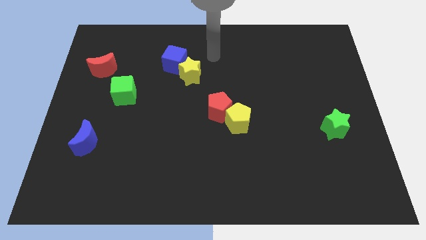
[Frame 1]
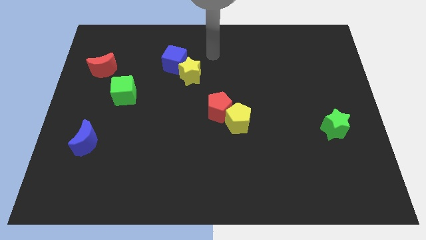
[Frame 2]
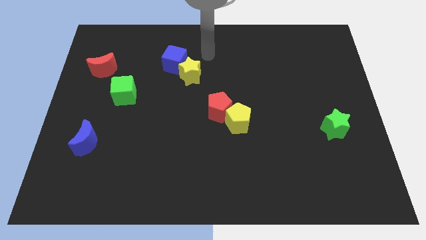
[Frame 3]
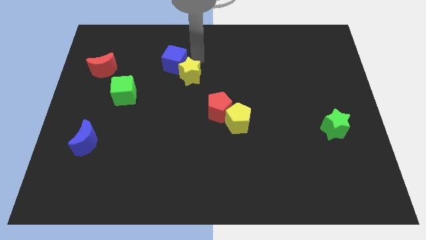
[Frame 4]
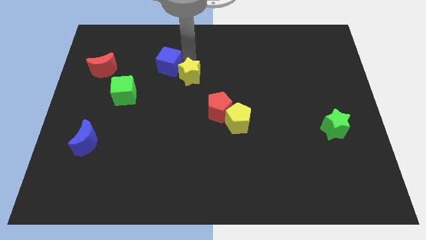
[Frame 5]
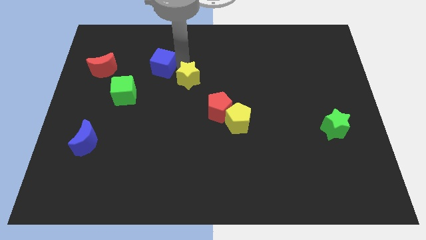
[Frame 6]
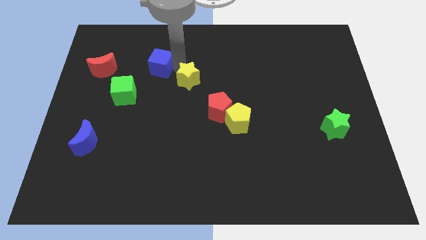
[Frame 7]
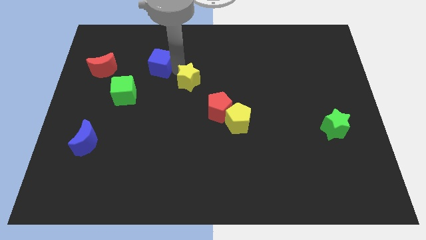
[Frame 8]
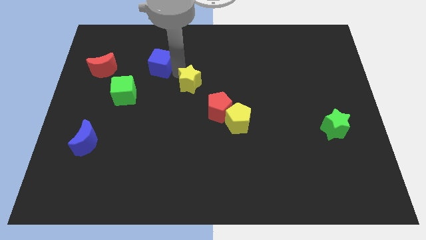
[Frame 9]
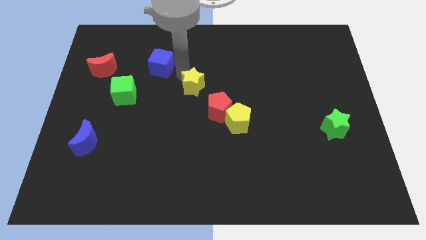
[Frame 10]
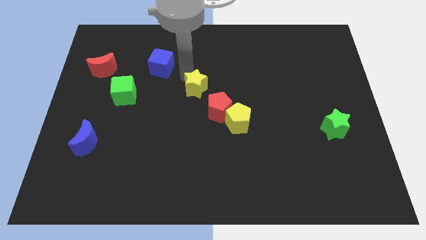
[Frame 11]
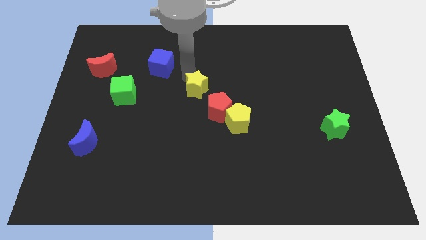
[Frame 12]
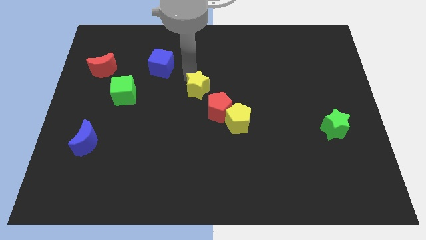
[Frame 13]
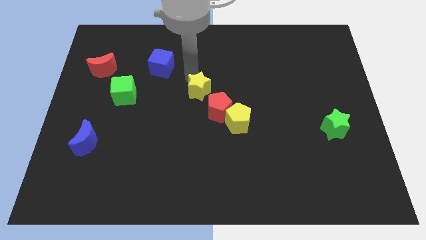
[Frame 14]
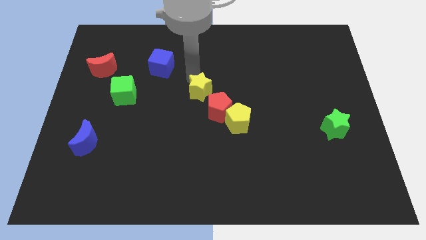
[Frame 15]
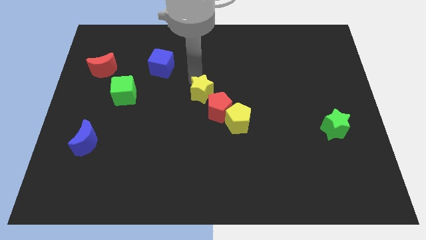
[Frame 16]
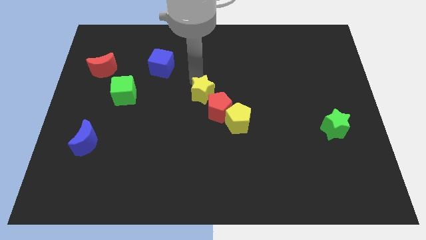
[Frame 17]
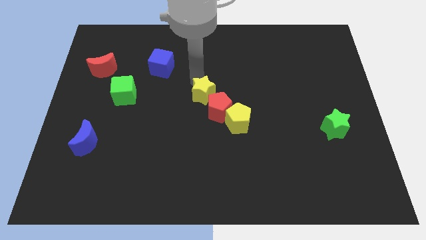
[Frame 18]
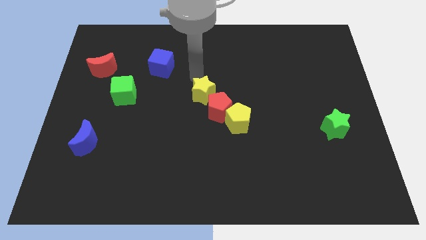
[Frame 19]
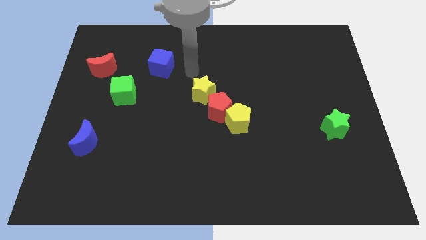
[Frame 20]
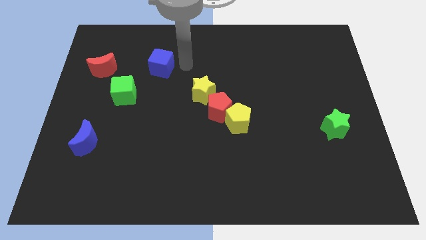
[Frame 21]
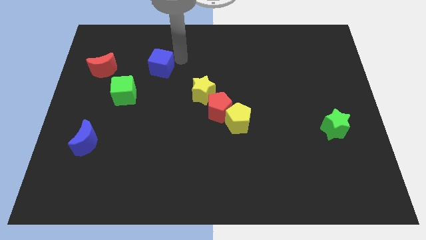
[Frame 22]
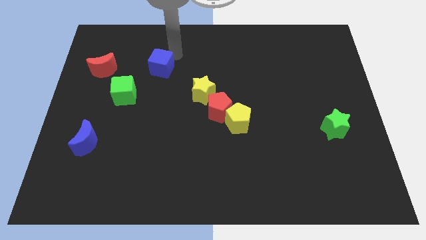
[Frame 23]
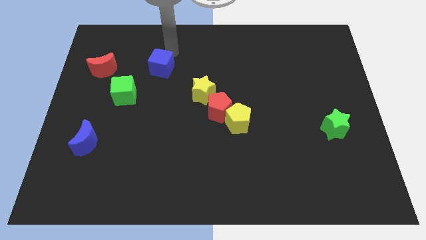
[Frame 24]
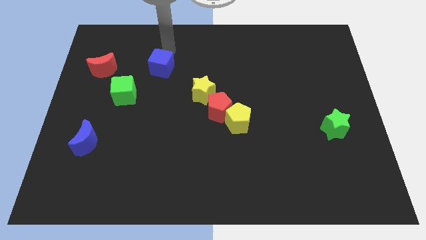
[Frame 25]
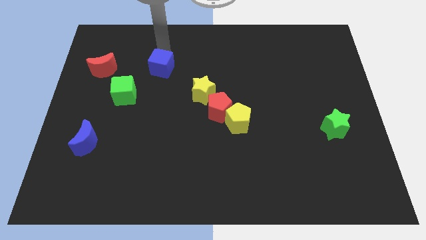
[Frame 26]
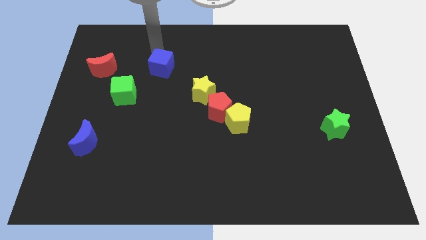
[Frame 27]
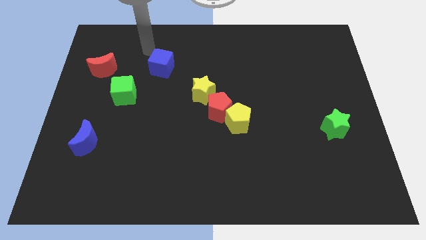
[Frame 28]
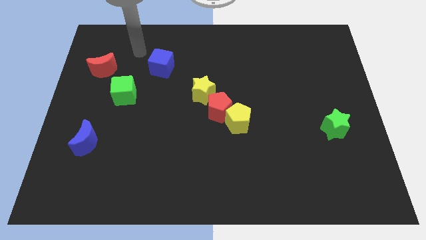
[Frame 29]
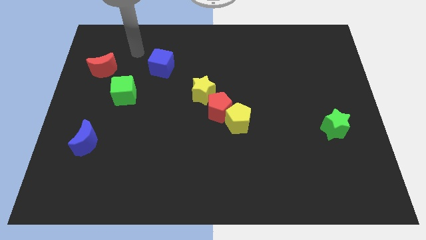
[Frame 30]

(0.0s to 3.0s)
separate yellow star from blue cube

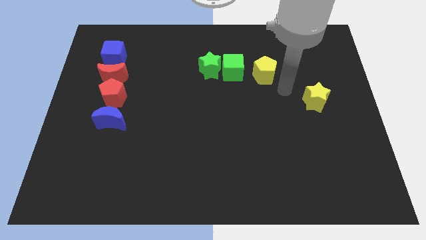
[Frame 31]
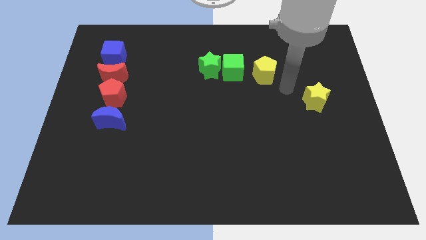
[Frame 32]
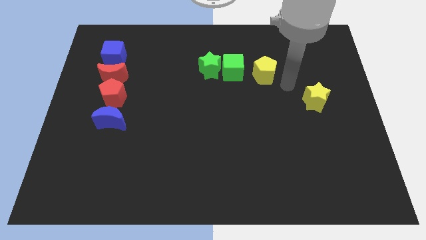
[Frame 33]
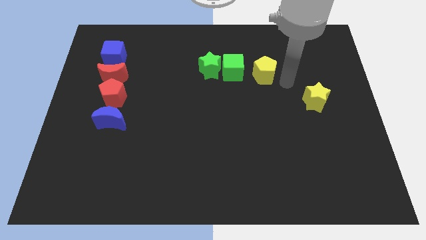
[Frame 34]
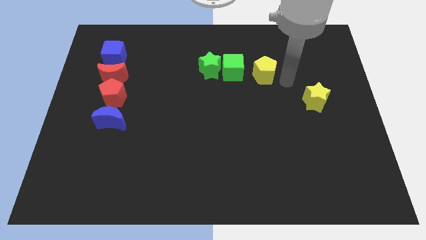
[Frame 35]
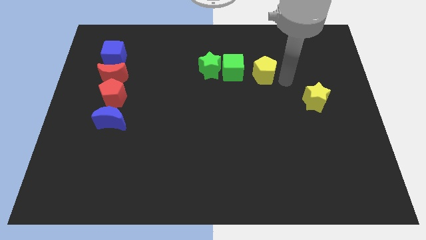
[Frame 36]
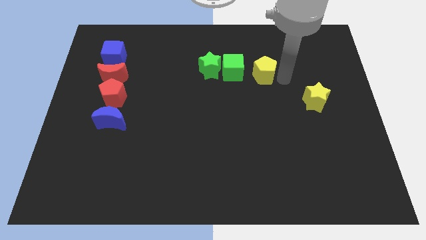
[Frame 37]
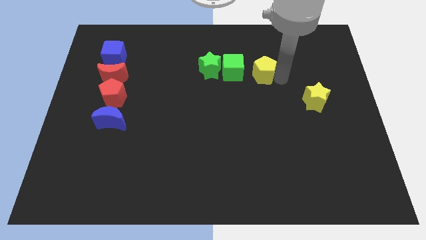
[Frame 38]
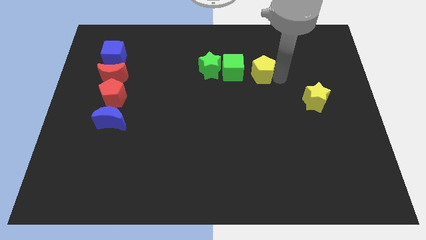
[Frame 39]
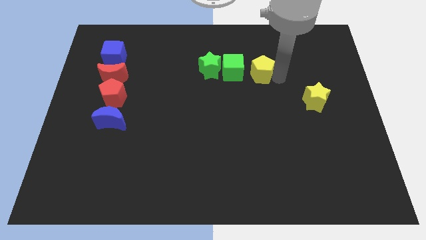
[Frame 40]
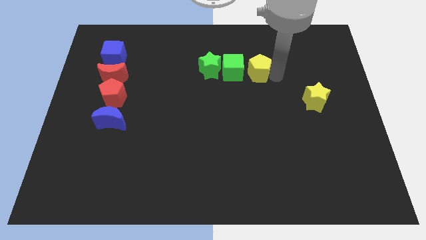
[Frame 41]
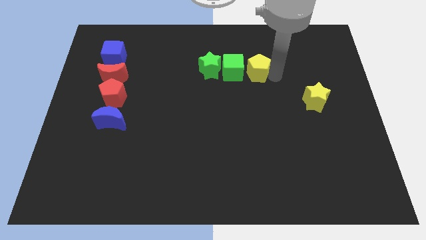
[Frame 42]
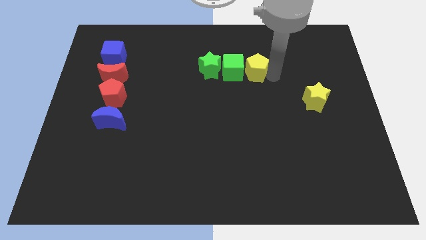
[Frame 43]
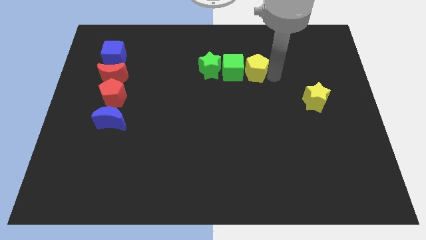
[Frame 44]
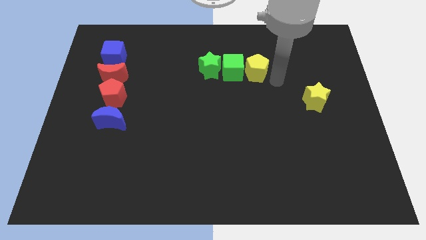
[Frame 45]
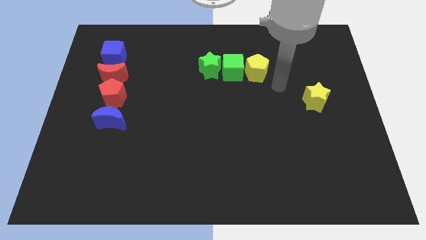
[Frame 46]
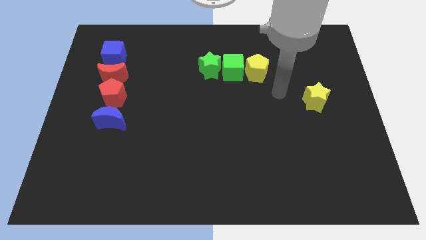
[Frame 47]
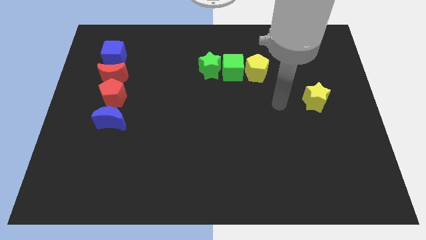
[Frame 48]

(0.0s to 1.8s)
place the yellow pentagon to the right of the green cube

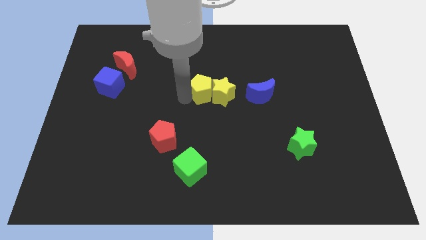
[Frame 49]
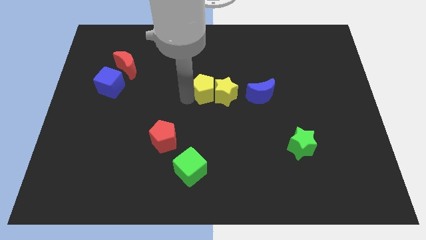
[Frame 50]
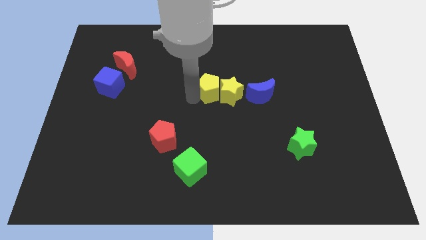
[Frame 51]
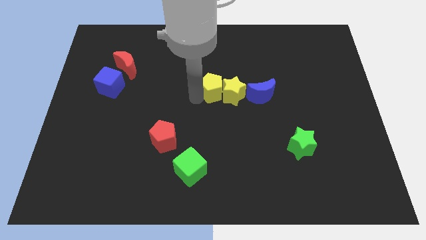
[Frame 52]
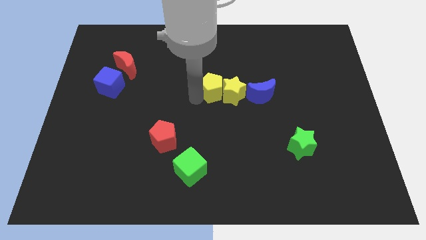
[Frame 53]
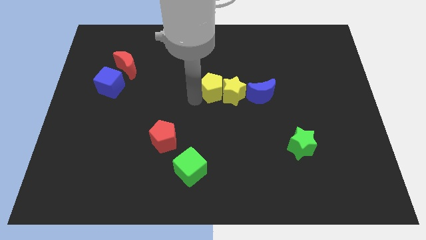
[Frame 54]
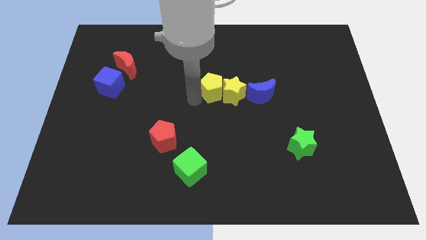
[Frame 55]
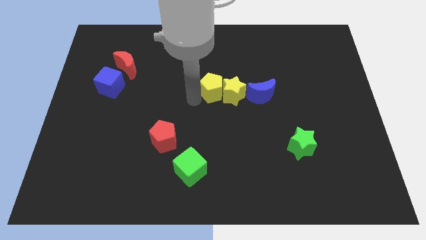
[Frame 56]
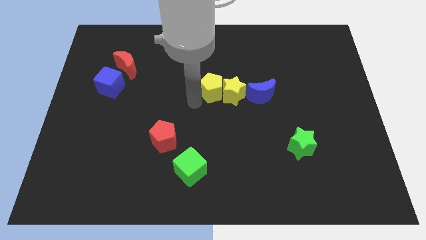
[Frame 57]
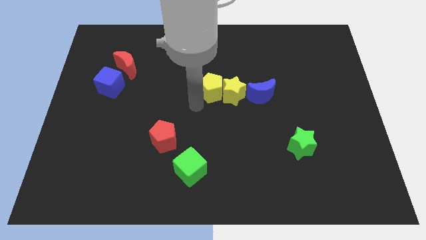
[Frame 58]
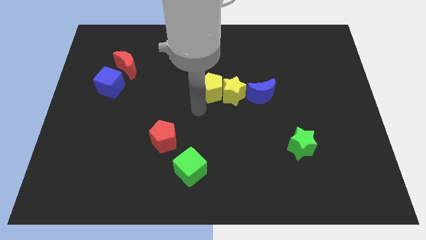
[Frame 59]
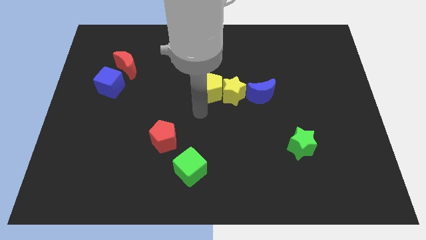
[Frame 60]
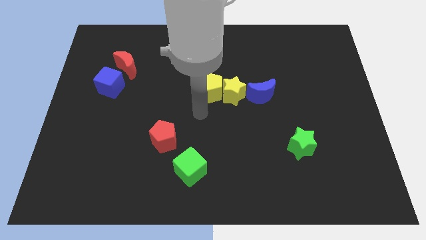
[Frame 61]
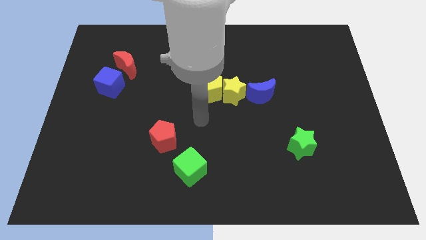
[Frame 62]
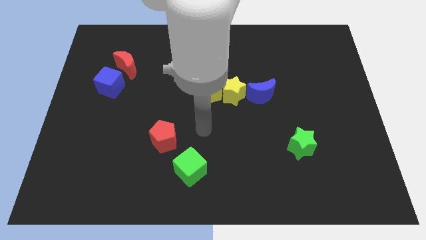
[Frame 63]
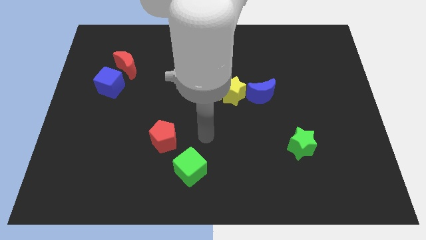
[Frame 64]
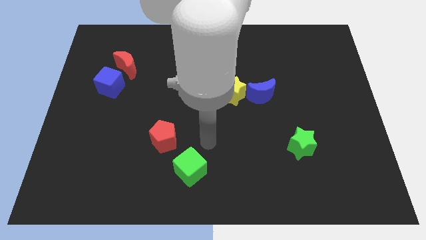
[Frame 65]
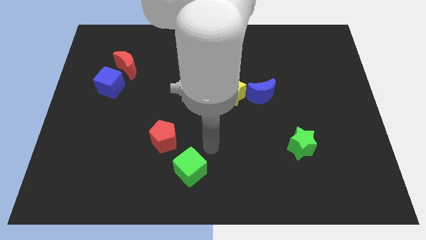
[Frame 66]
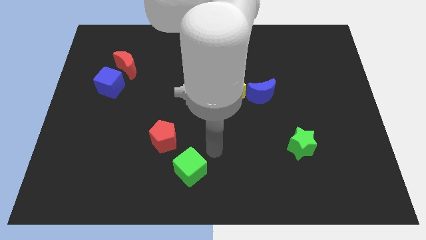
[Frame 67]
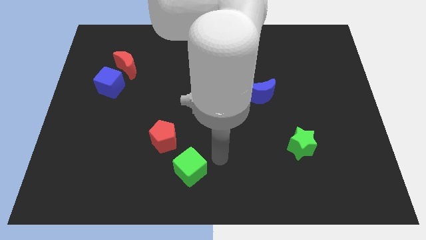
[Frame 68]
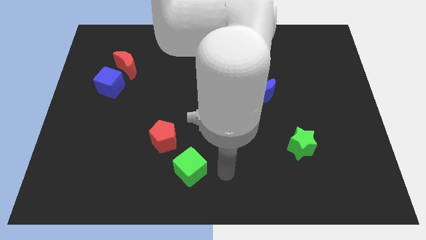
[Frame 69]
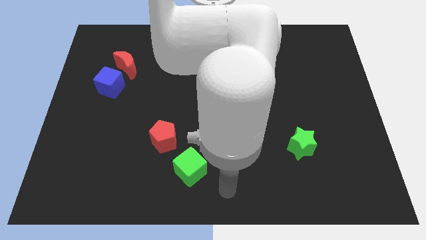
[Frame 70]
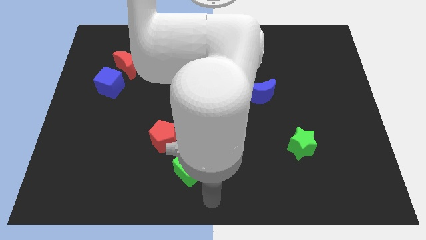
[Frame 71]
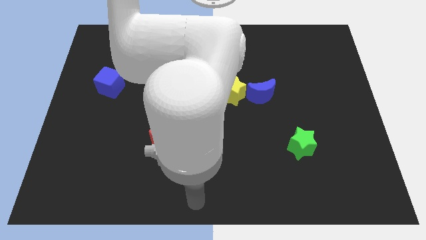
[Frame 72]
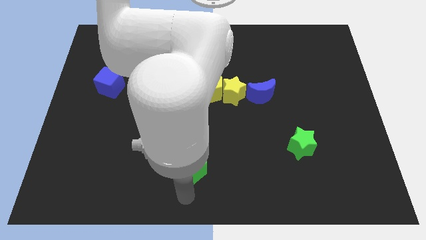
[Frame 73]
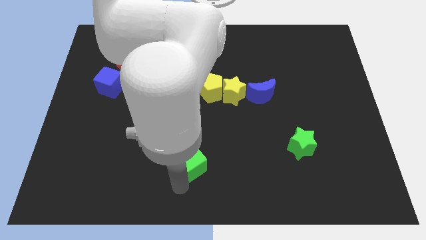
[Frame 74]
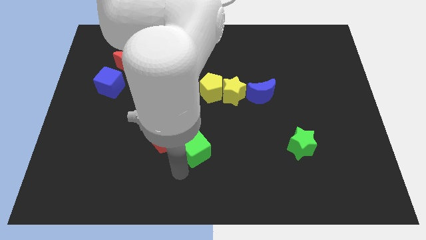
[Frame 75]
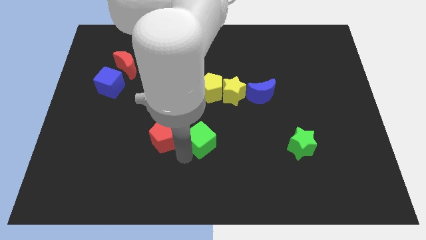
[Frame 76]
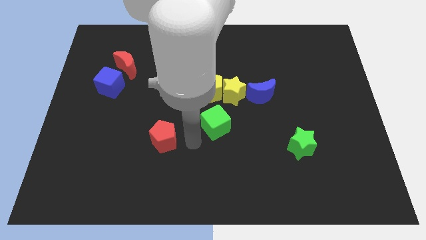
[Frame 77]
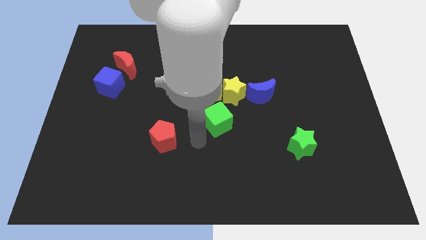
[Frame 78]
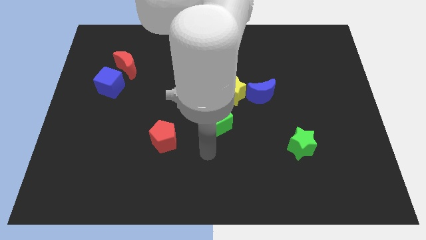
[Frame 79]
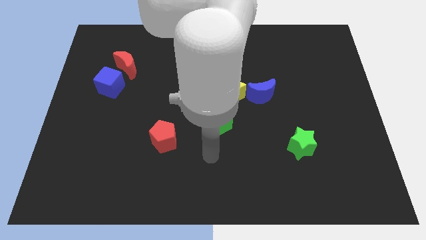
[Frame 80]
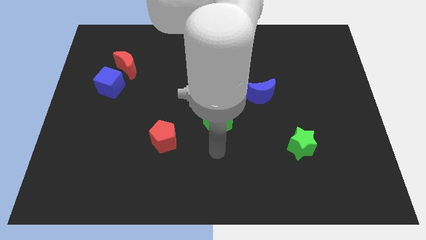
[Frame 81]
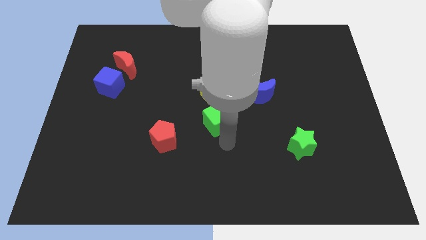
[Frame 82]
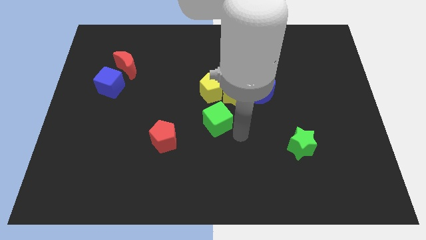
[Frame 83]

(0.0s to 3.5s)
move the green cube down to the yellow blocks

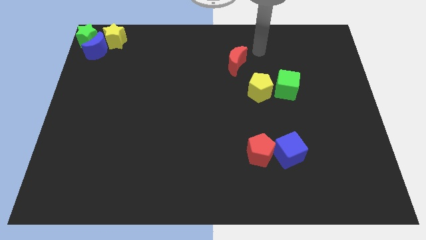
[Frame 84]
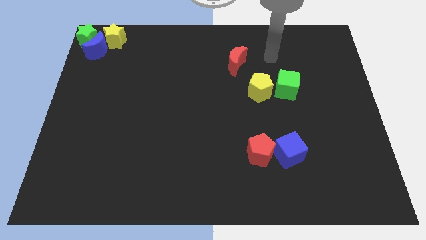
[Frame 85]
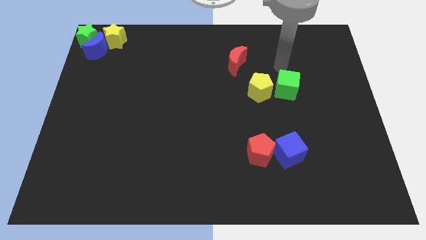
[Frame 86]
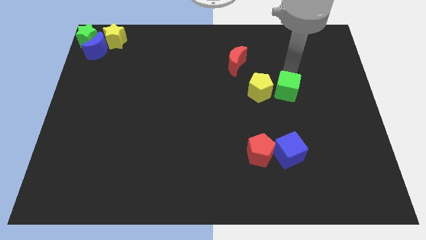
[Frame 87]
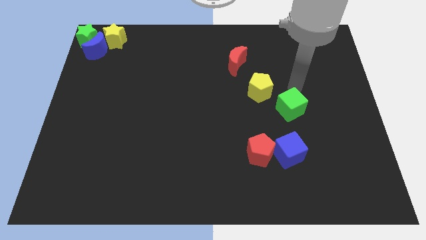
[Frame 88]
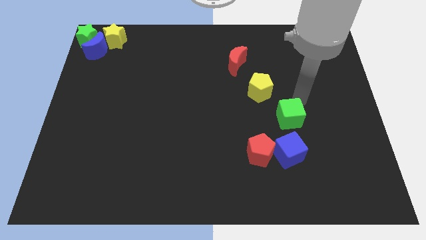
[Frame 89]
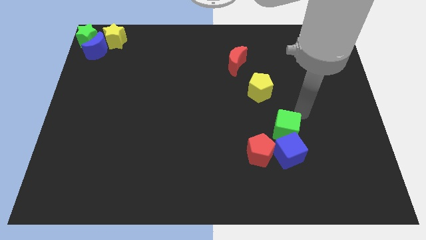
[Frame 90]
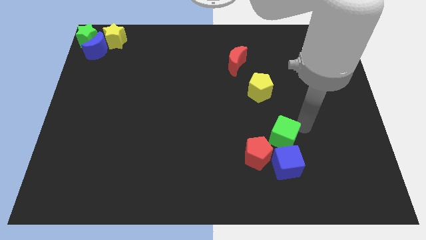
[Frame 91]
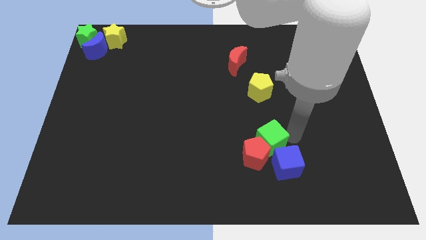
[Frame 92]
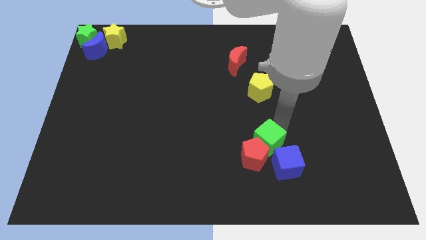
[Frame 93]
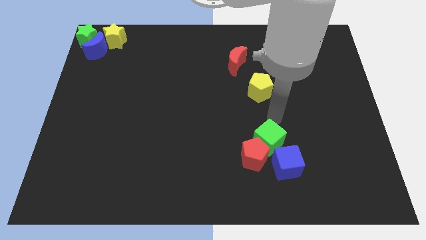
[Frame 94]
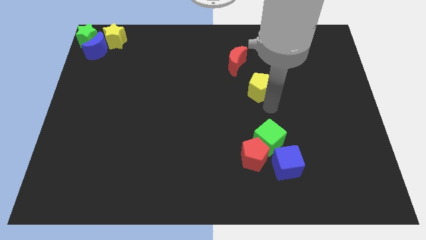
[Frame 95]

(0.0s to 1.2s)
push green cube into the red pentagon
